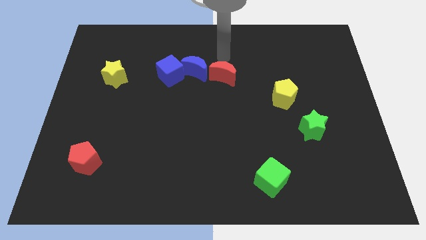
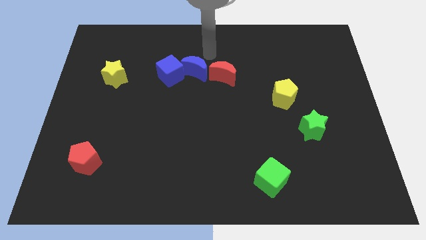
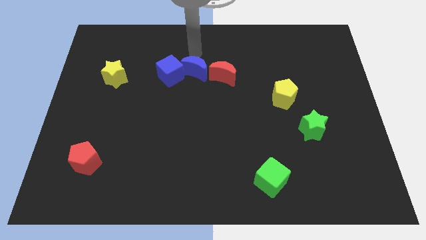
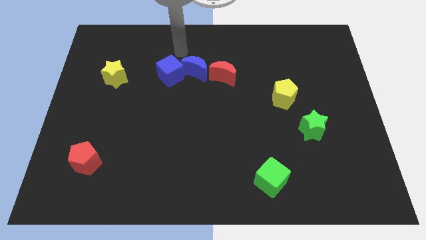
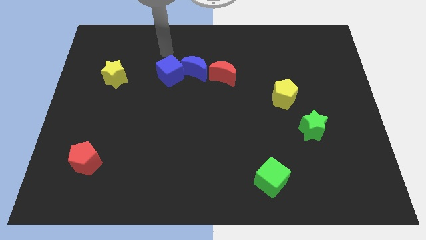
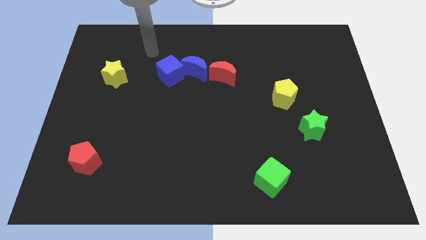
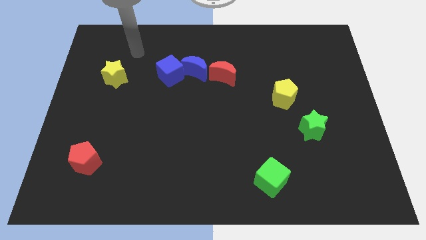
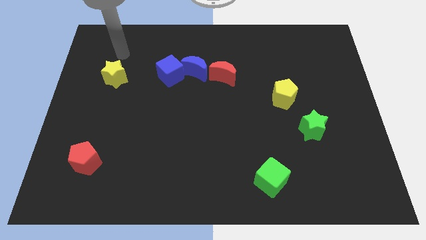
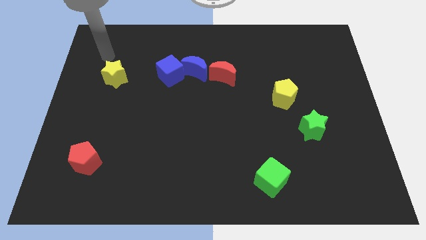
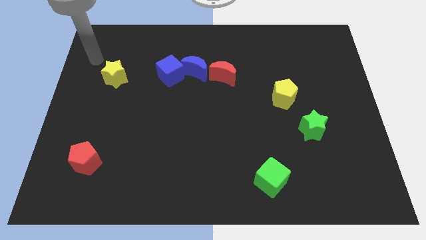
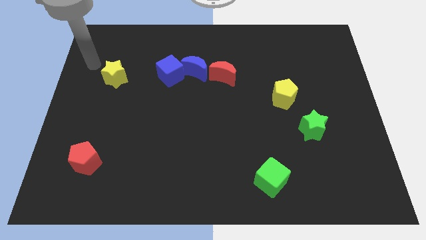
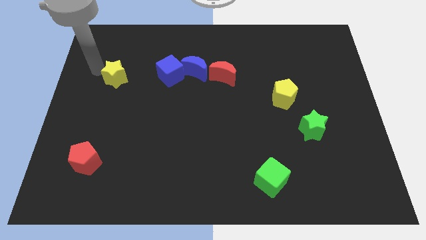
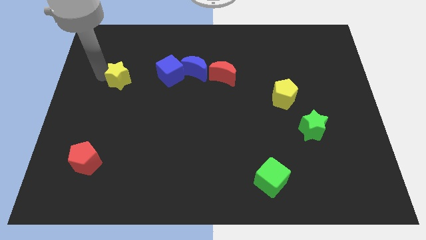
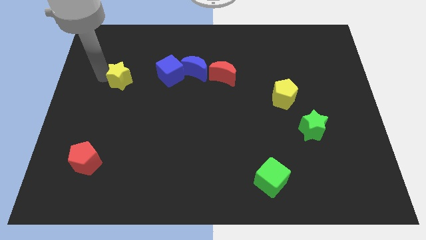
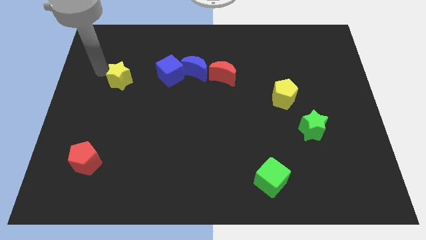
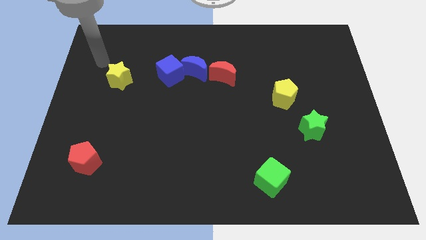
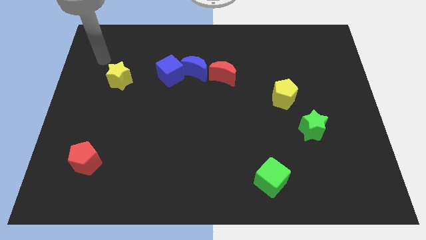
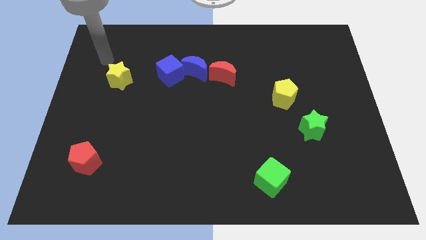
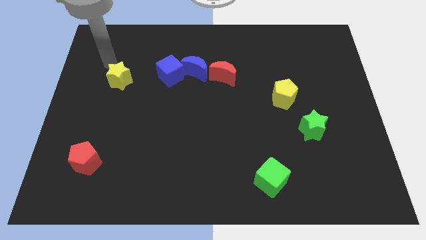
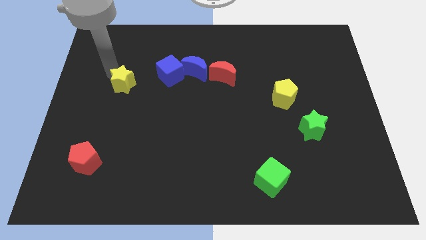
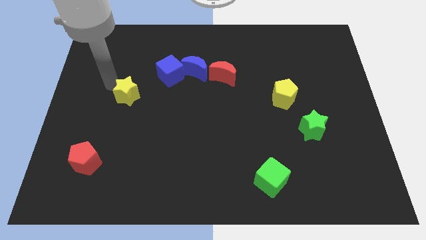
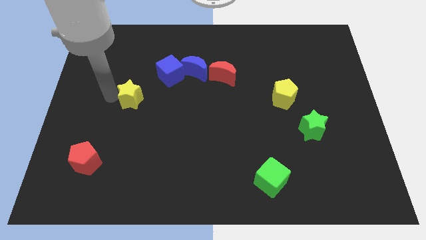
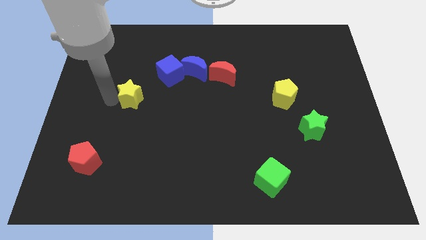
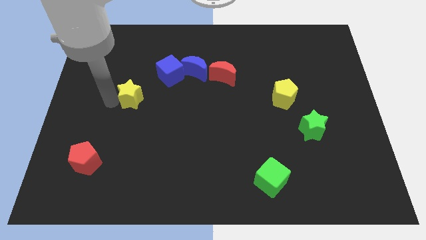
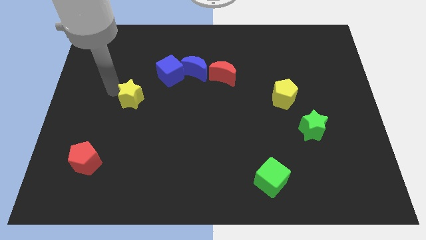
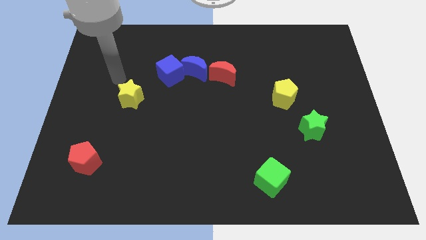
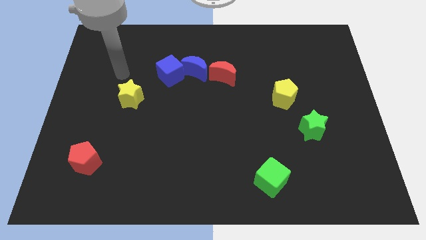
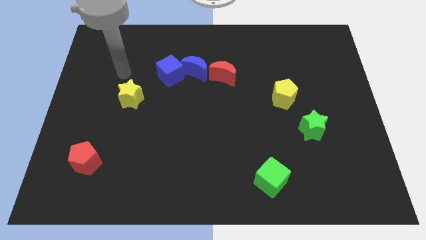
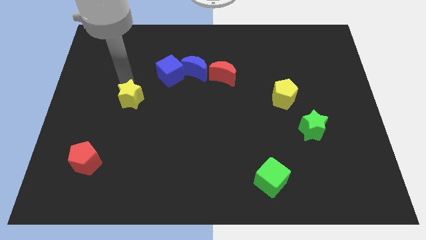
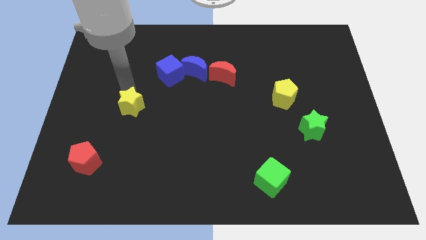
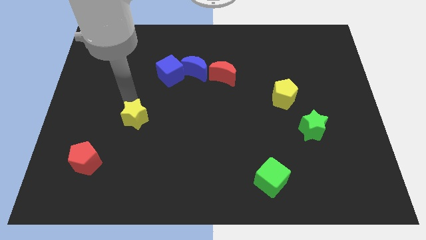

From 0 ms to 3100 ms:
place the yellow star diagonally in between the blue cube and red pentagon

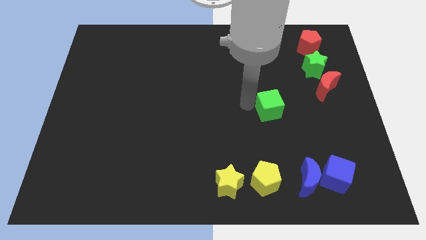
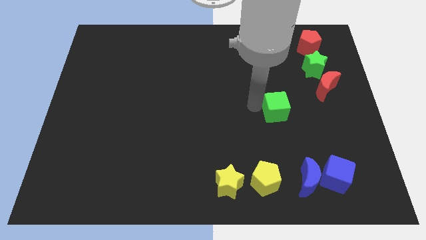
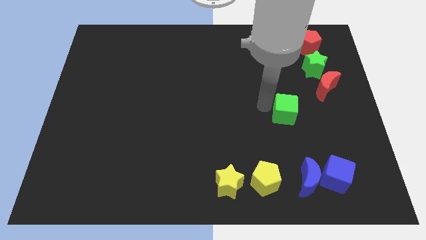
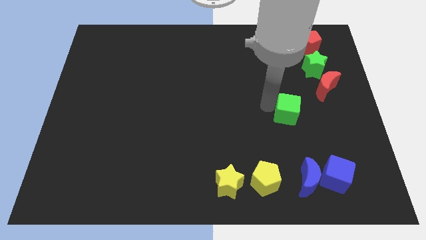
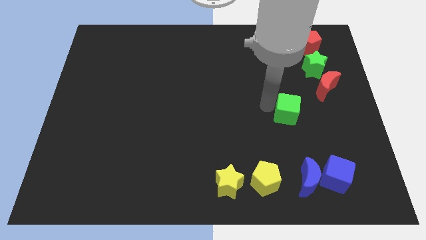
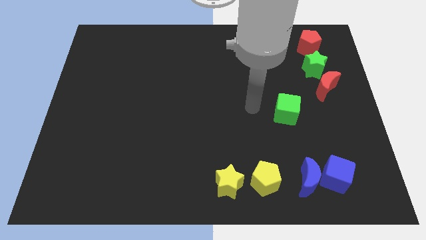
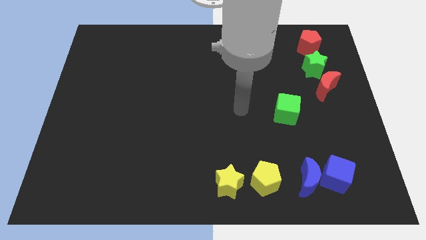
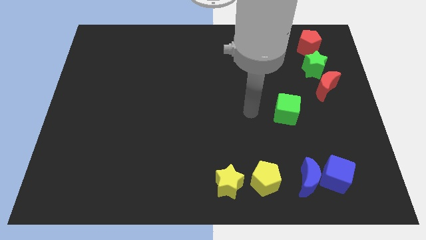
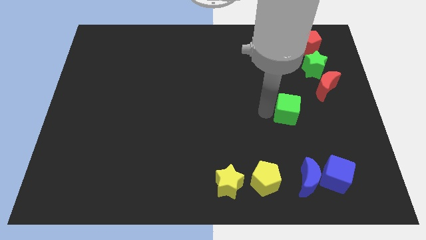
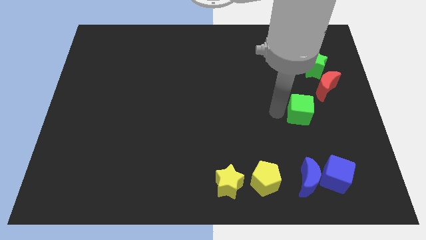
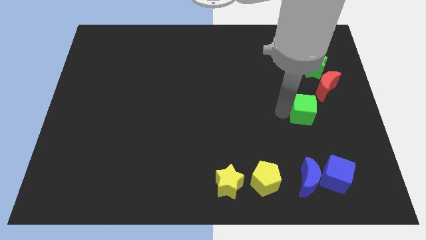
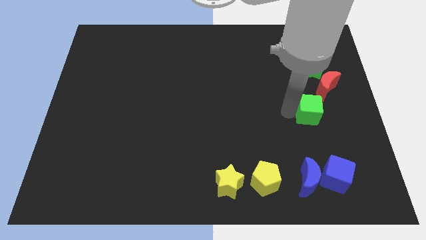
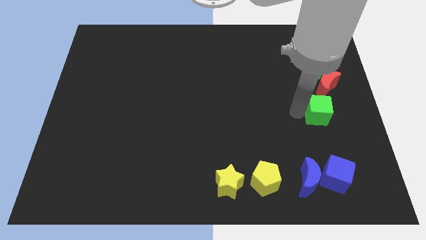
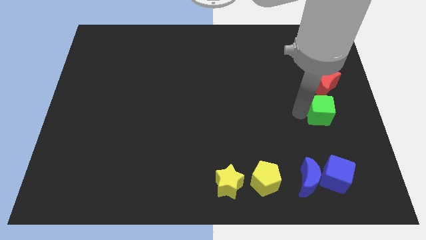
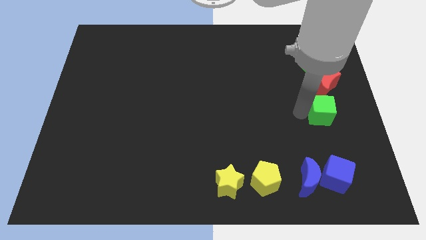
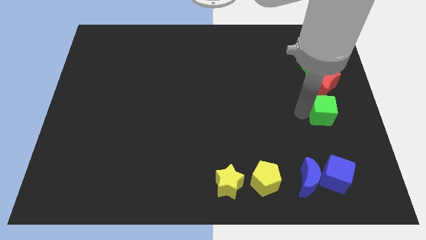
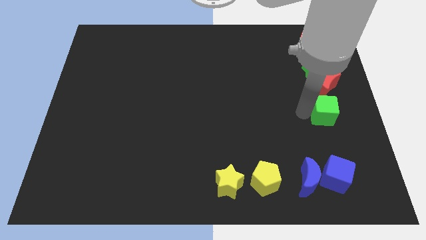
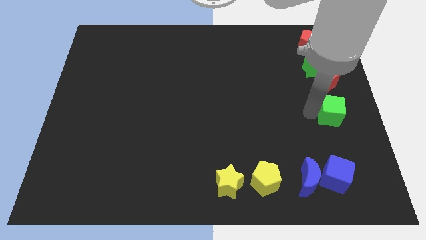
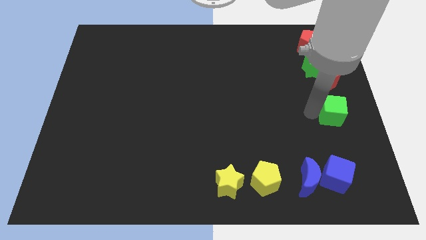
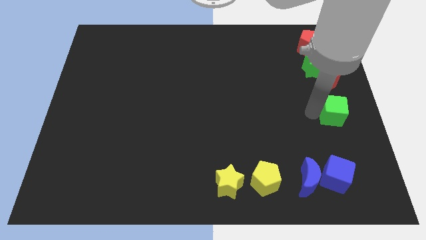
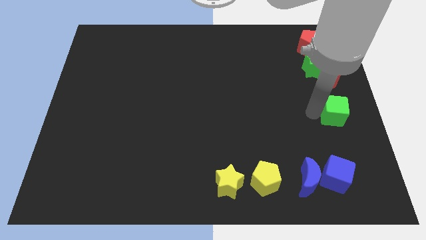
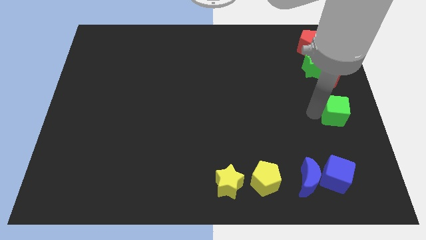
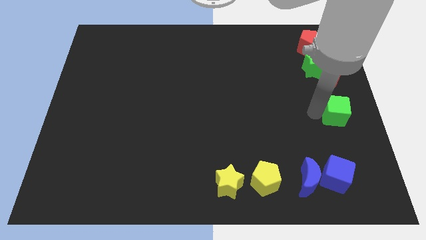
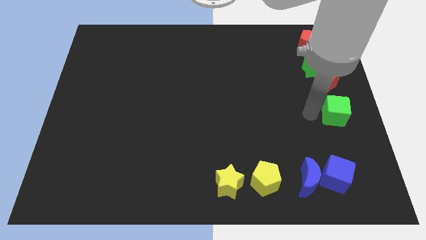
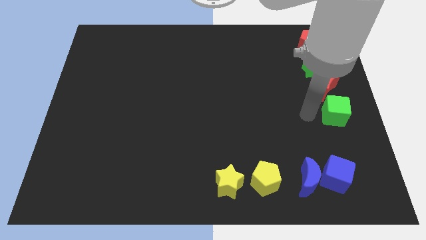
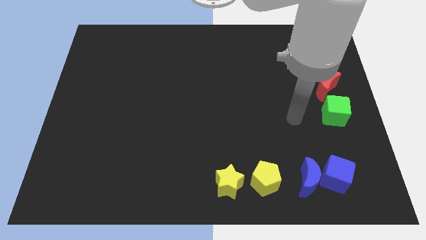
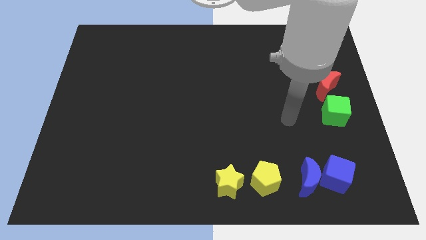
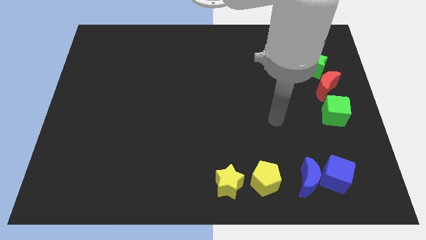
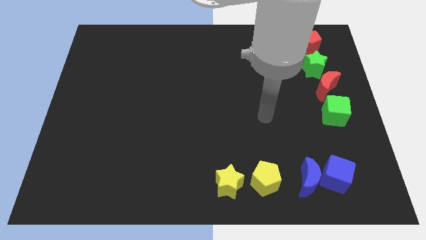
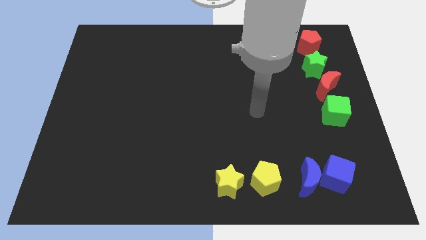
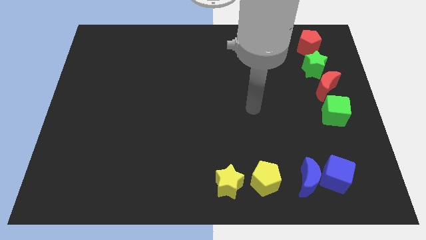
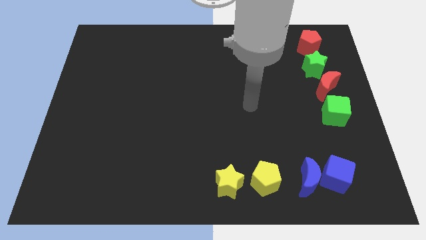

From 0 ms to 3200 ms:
place the arm towards the center of the board

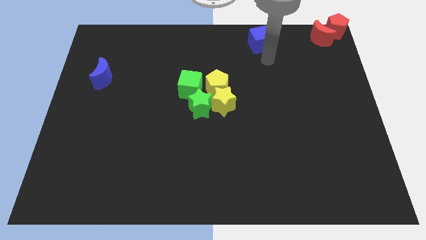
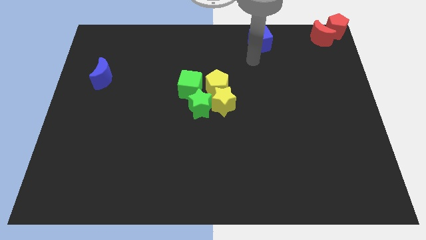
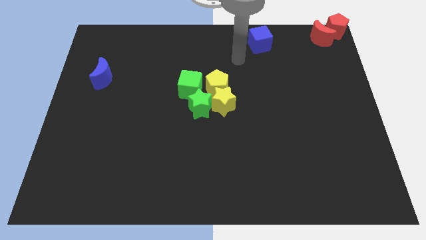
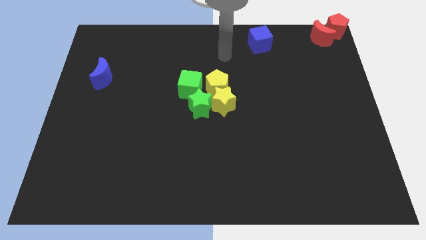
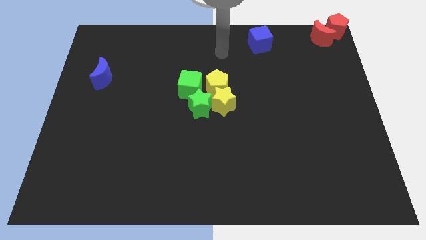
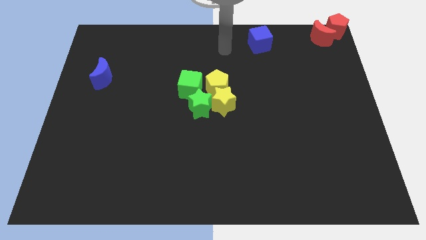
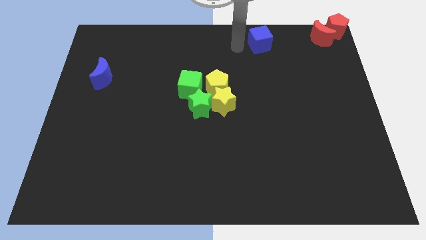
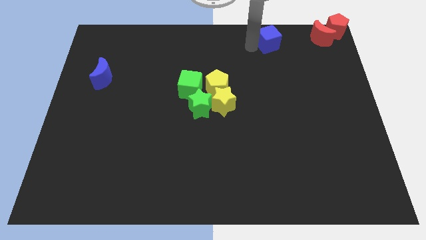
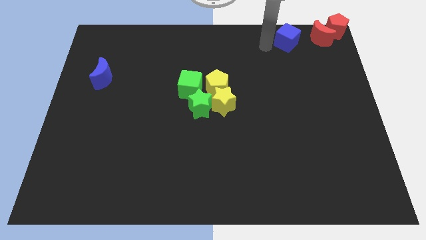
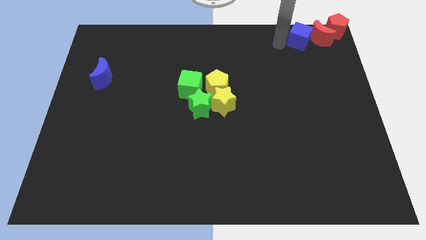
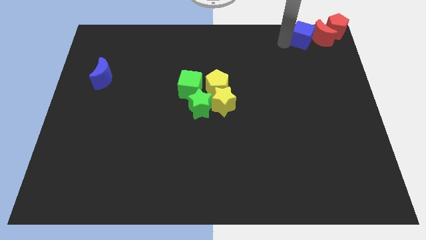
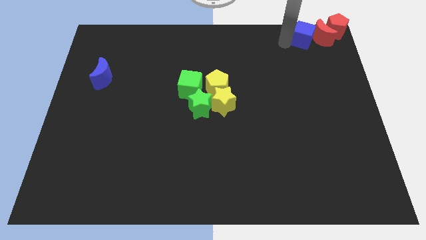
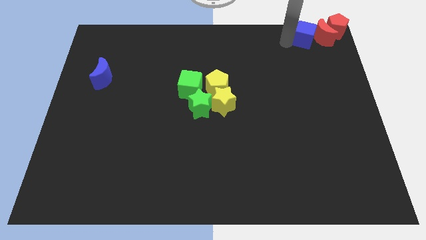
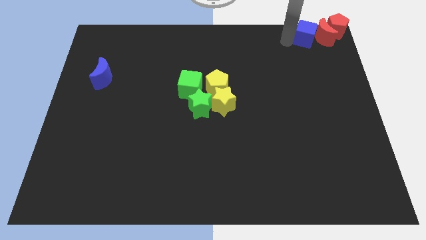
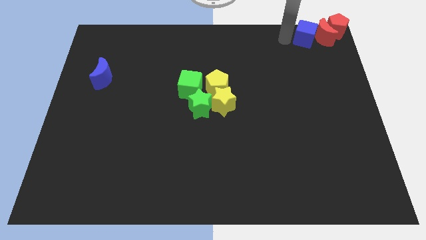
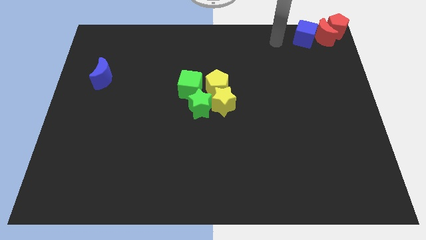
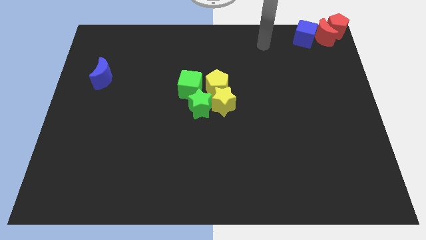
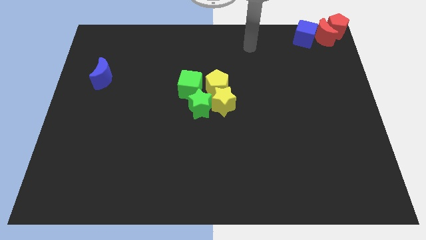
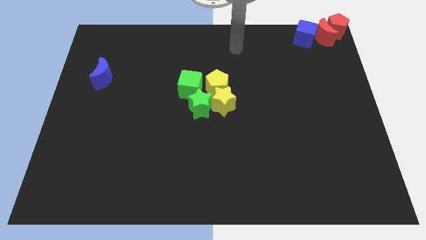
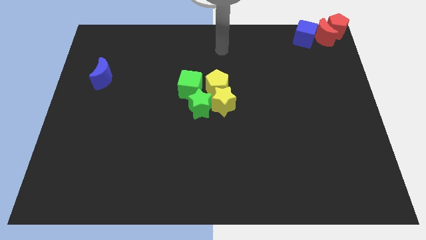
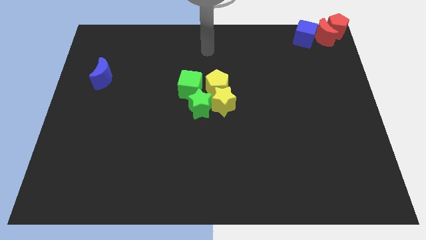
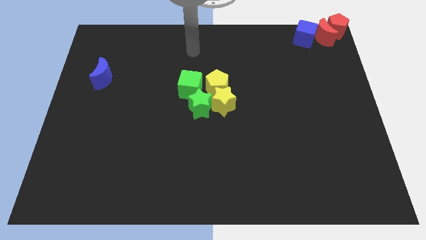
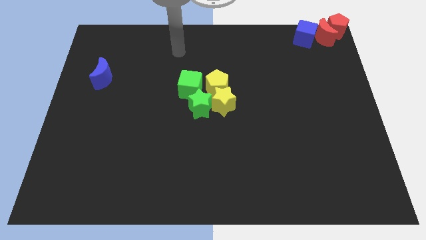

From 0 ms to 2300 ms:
move the blue cube to the left side of the red crescent

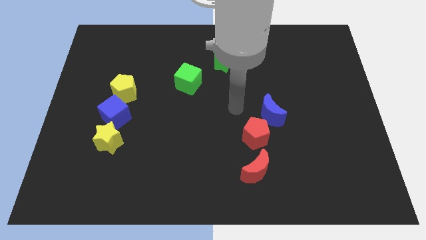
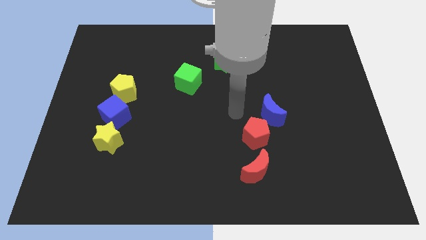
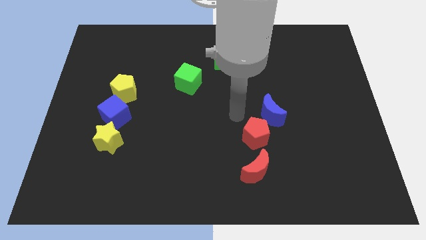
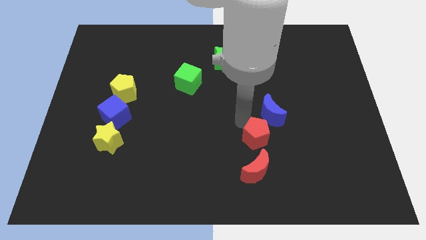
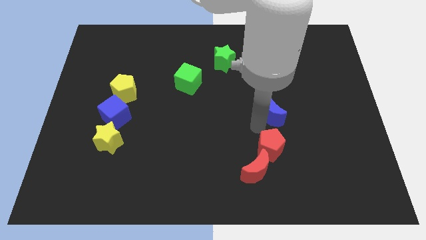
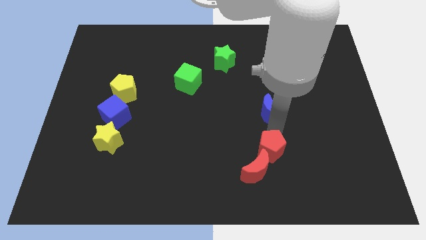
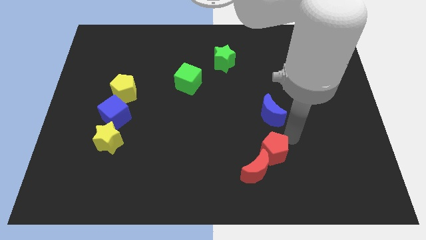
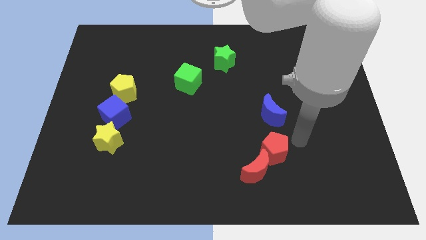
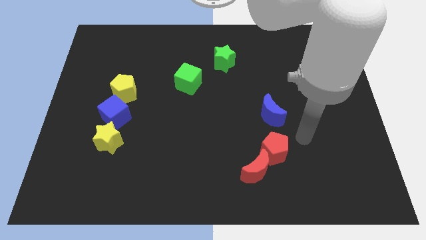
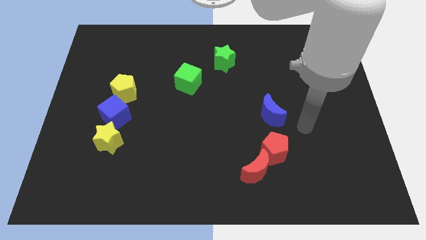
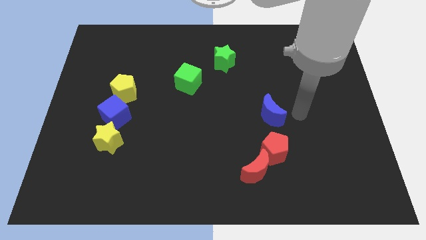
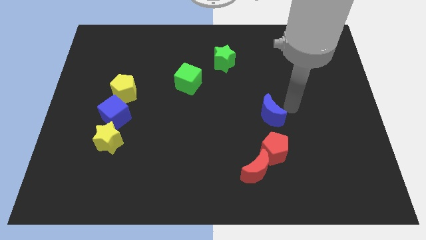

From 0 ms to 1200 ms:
slide the red pentagon diagonally at the top of red moon
